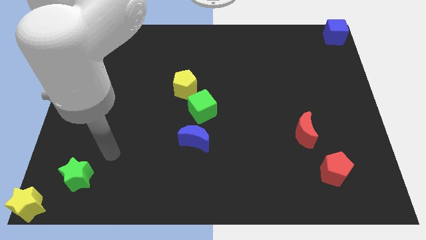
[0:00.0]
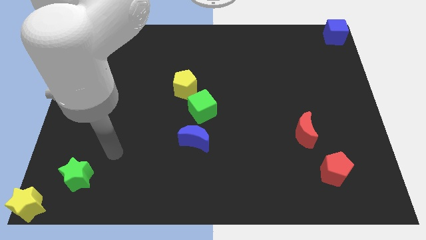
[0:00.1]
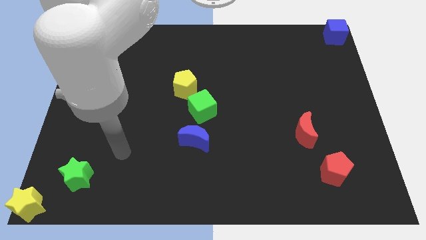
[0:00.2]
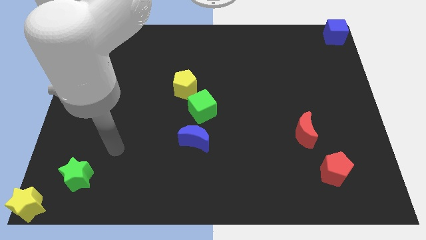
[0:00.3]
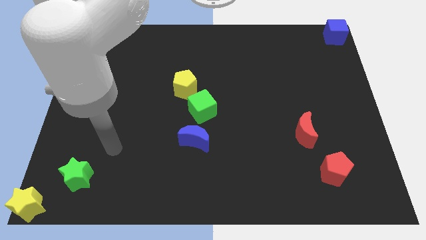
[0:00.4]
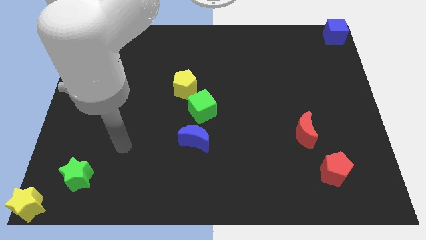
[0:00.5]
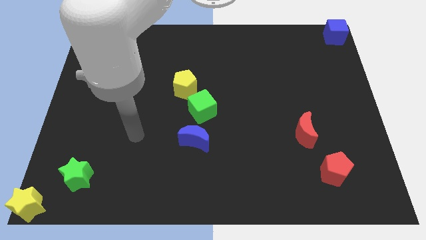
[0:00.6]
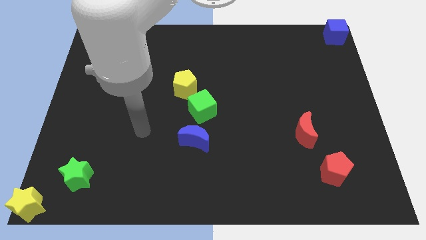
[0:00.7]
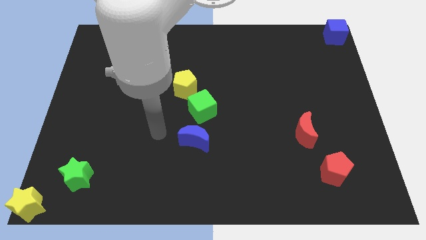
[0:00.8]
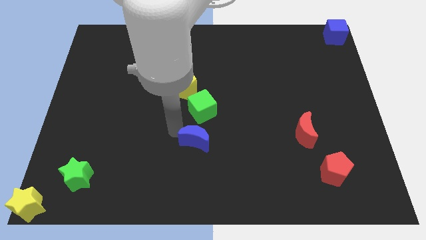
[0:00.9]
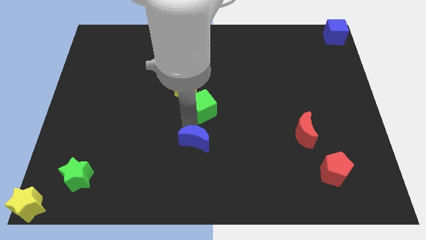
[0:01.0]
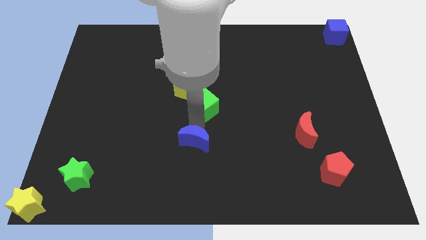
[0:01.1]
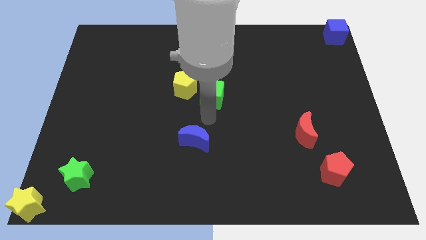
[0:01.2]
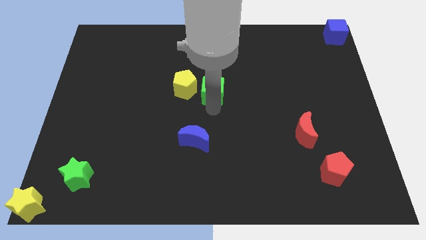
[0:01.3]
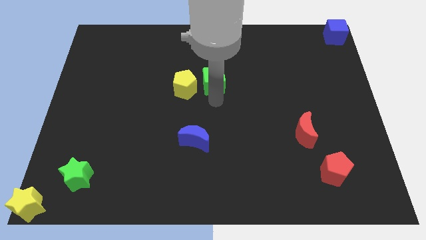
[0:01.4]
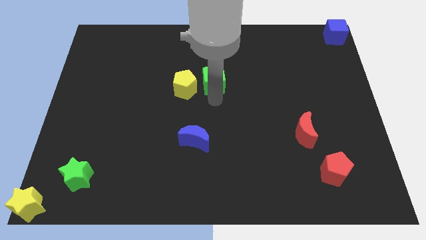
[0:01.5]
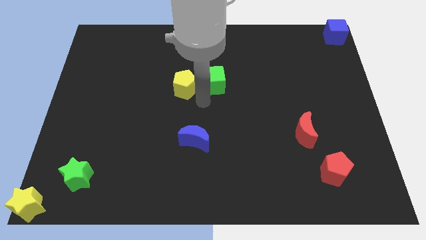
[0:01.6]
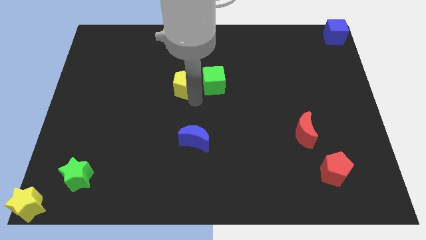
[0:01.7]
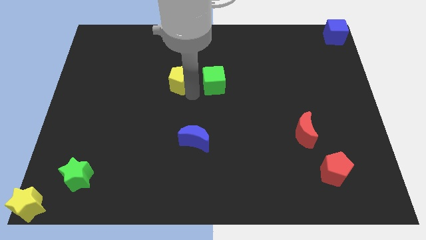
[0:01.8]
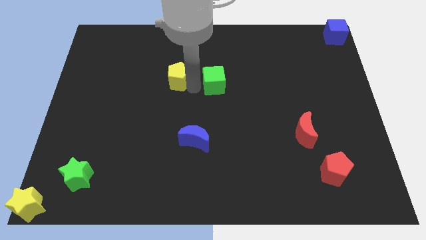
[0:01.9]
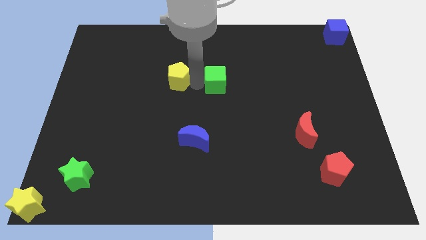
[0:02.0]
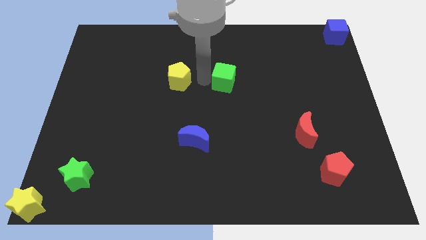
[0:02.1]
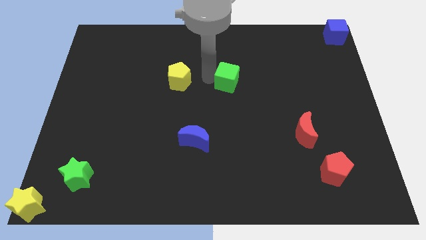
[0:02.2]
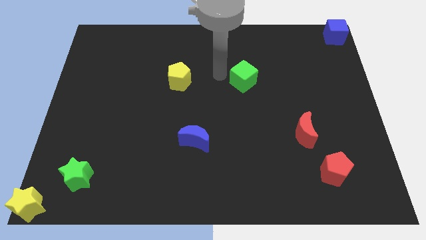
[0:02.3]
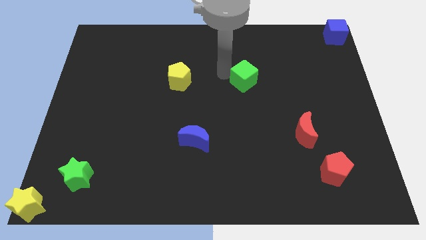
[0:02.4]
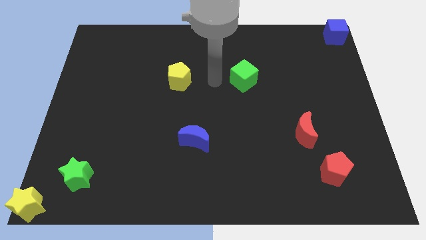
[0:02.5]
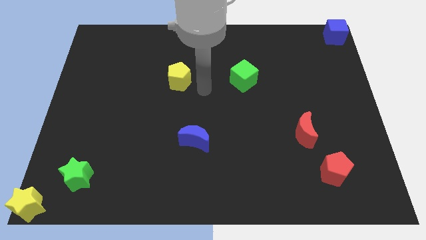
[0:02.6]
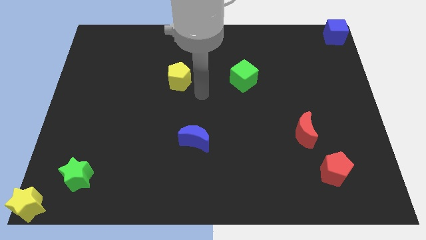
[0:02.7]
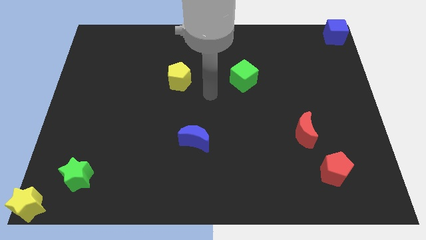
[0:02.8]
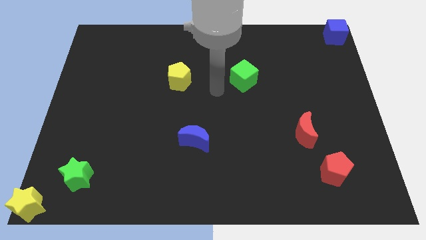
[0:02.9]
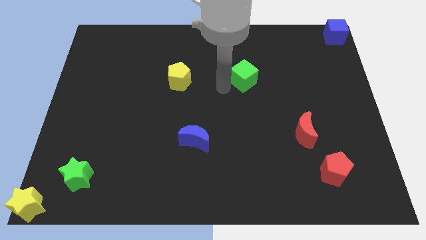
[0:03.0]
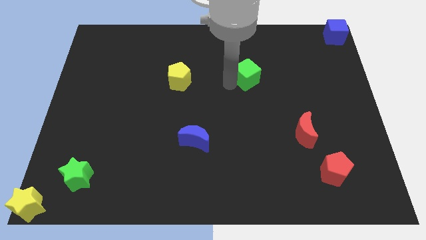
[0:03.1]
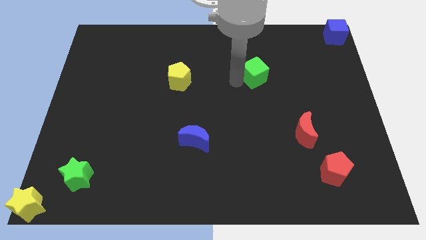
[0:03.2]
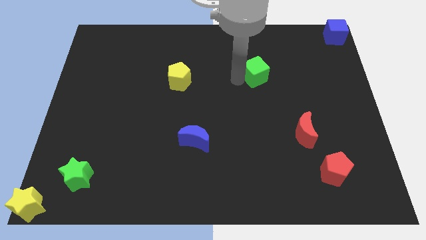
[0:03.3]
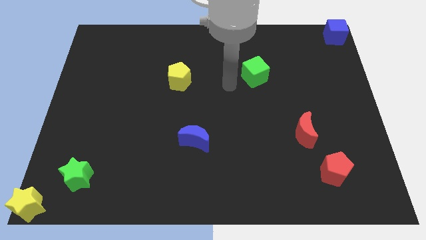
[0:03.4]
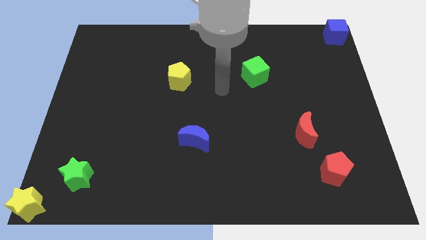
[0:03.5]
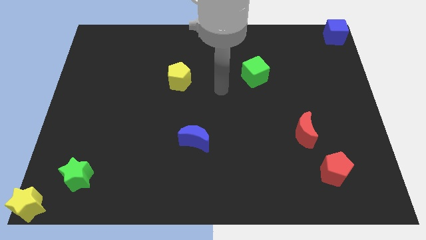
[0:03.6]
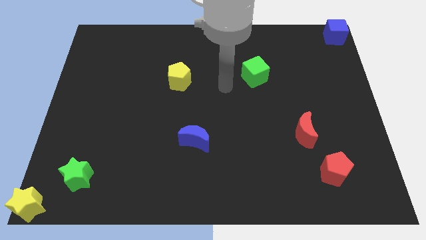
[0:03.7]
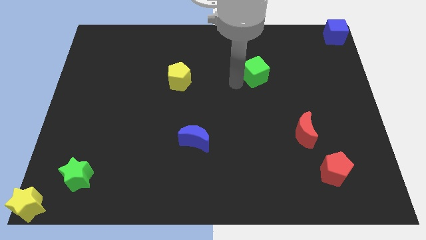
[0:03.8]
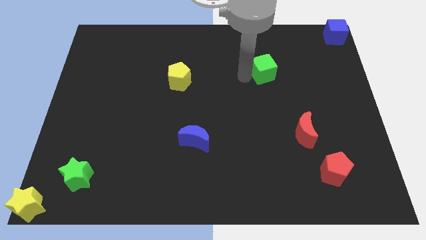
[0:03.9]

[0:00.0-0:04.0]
separate the green cube from the yellow pentagon

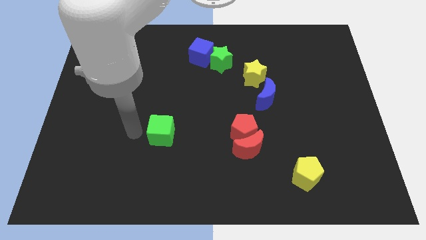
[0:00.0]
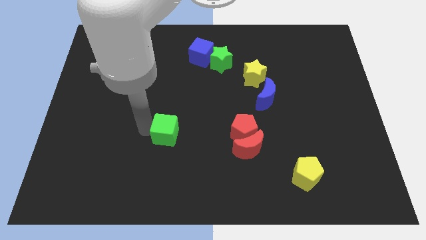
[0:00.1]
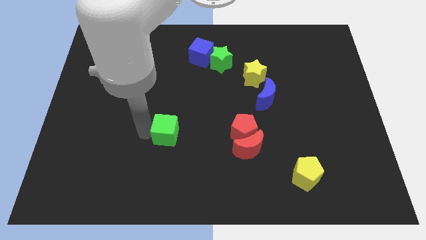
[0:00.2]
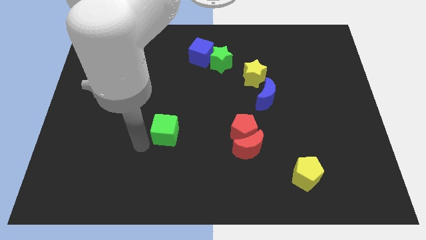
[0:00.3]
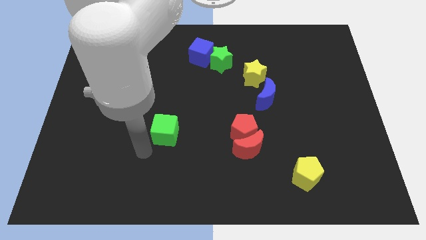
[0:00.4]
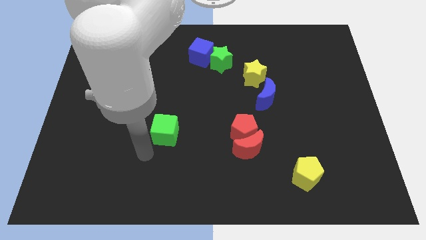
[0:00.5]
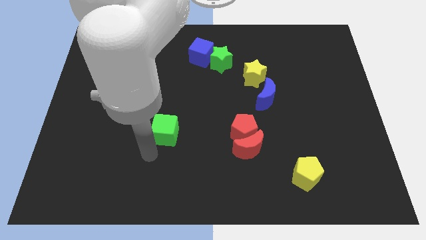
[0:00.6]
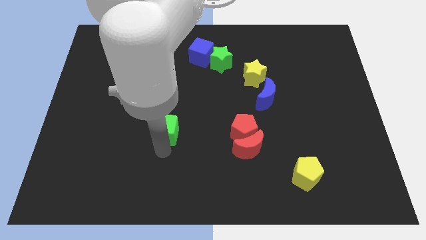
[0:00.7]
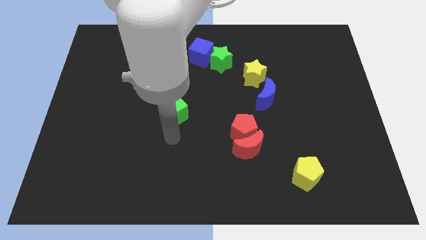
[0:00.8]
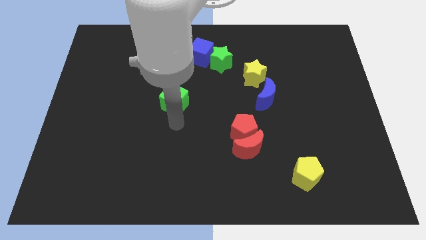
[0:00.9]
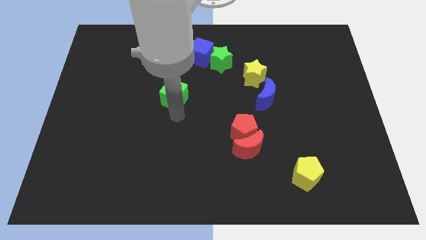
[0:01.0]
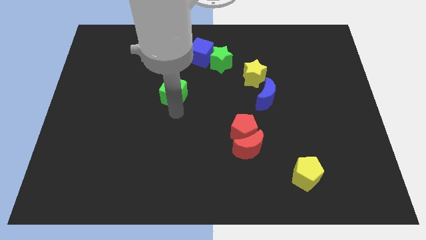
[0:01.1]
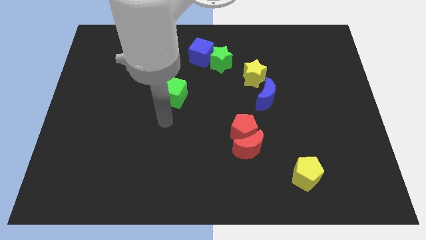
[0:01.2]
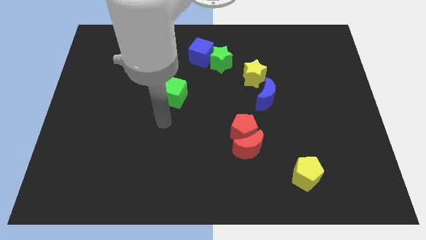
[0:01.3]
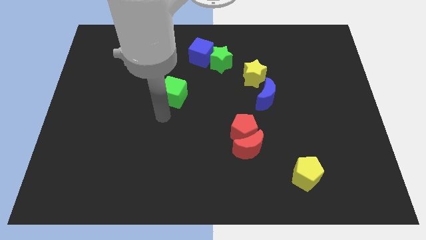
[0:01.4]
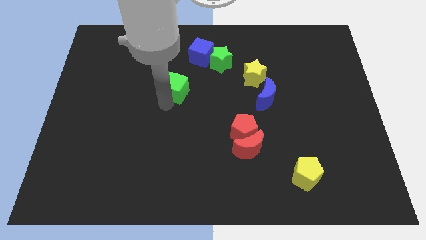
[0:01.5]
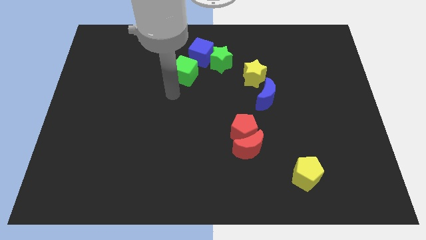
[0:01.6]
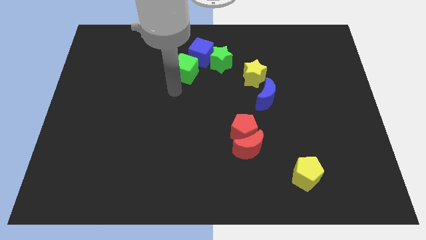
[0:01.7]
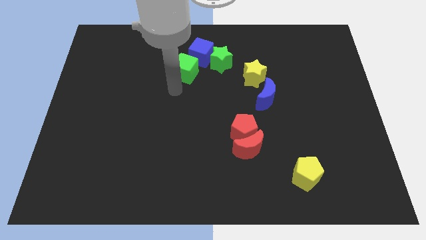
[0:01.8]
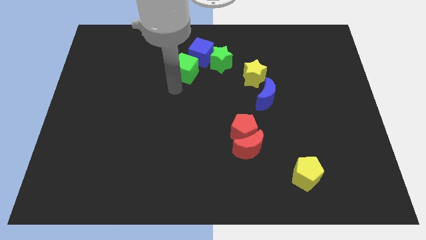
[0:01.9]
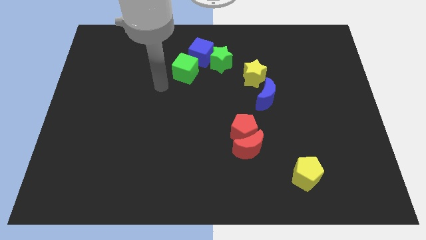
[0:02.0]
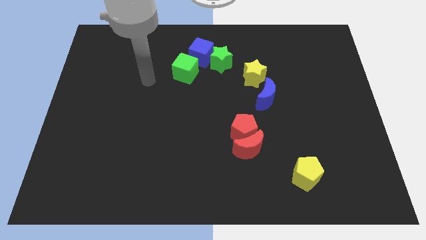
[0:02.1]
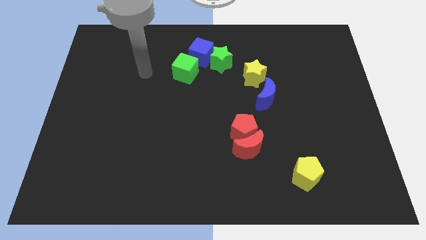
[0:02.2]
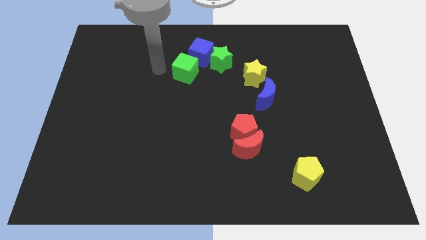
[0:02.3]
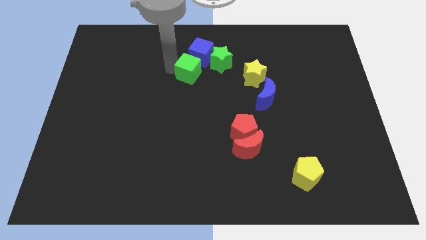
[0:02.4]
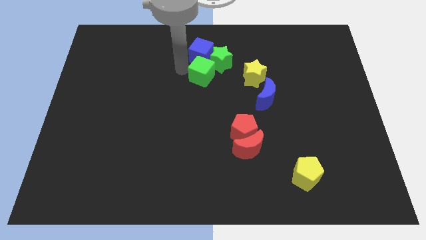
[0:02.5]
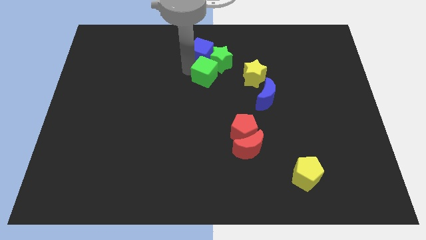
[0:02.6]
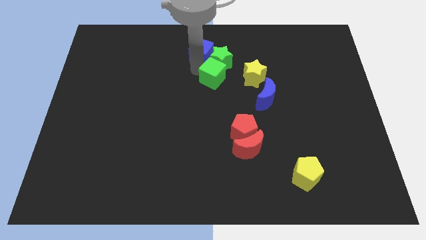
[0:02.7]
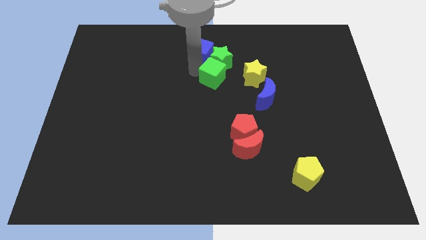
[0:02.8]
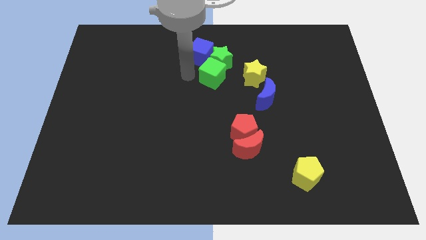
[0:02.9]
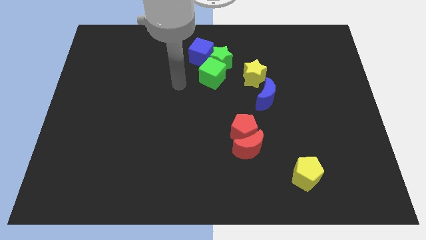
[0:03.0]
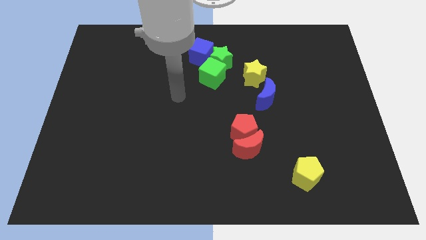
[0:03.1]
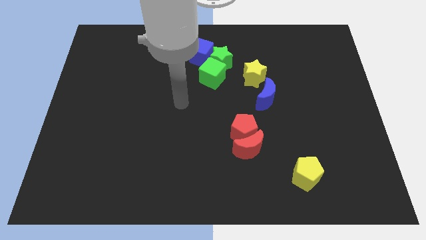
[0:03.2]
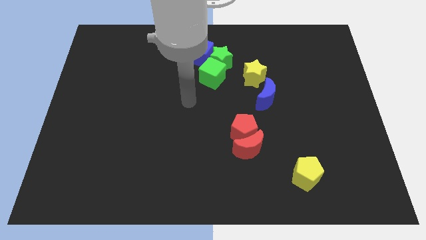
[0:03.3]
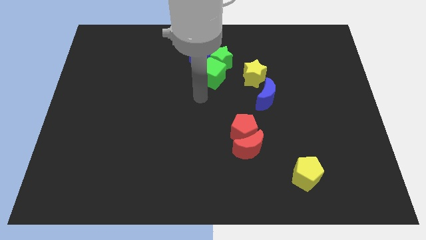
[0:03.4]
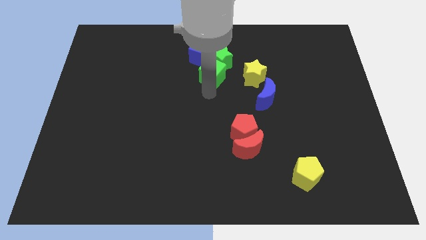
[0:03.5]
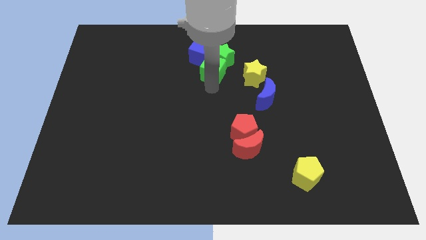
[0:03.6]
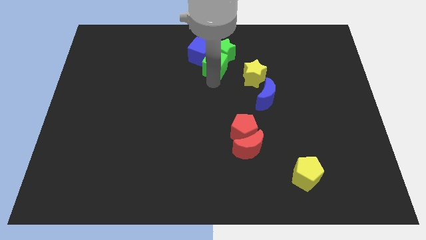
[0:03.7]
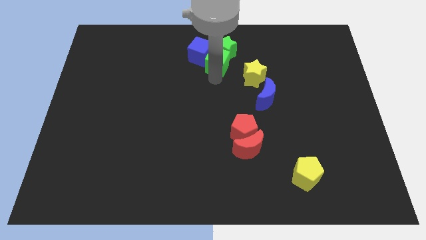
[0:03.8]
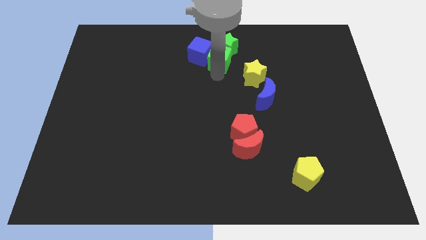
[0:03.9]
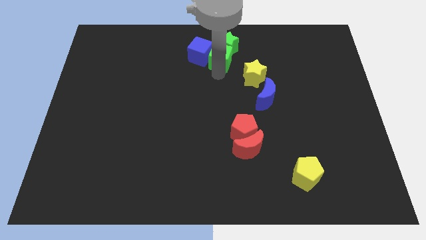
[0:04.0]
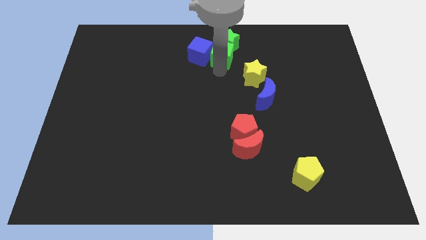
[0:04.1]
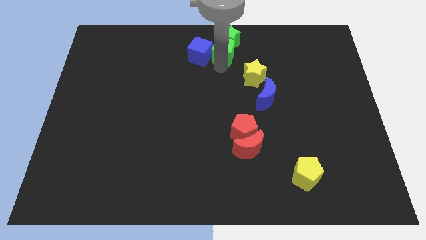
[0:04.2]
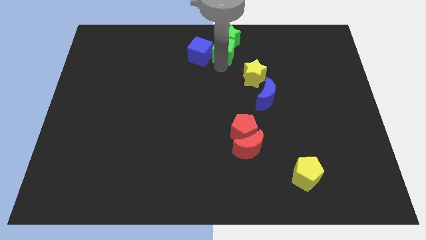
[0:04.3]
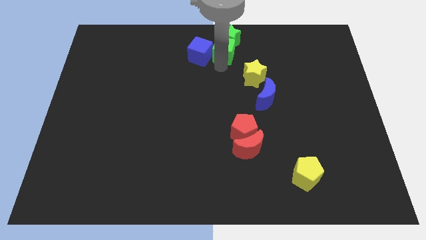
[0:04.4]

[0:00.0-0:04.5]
push the green star to the top middle with the green cube

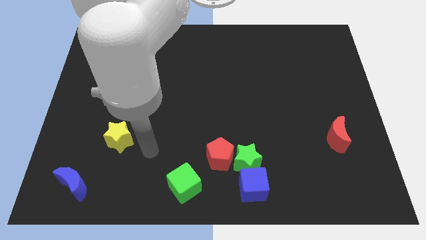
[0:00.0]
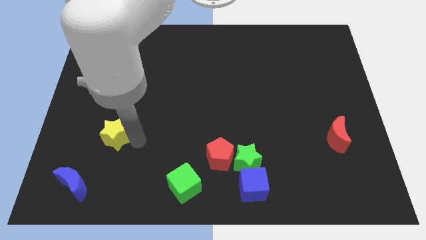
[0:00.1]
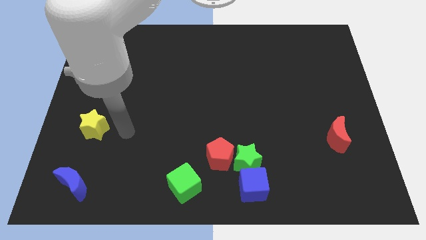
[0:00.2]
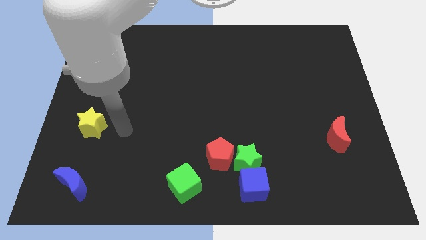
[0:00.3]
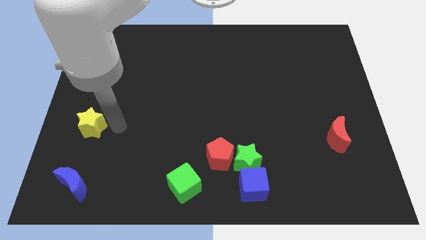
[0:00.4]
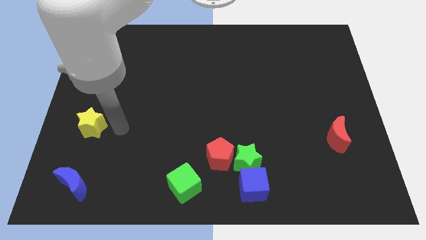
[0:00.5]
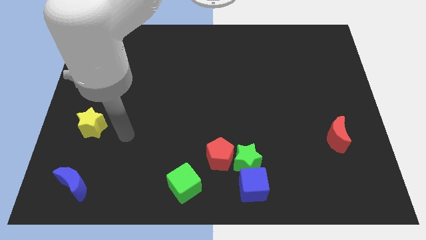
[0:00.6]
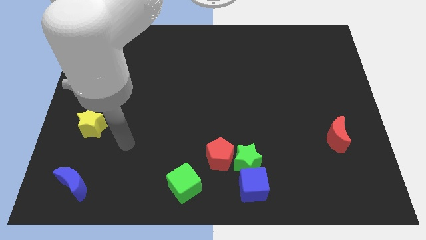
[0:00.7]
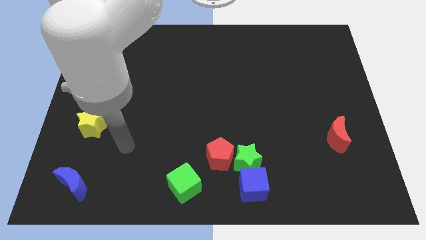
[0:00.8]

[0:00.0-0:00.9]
place the yellow star above the blue crescent
